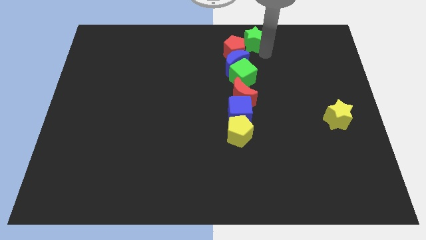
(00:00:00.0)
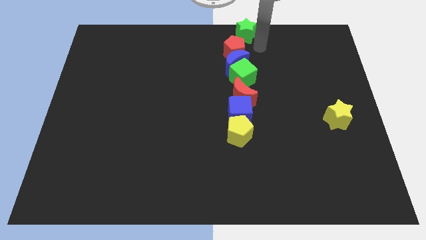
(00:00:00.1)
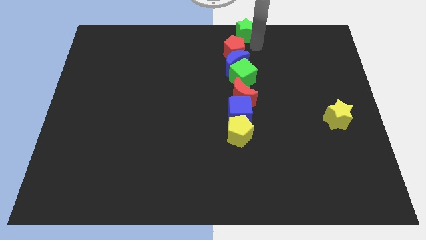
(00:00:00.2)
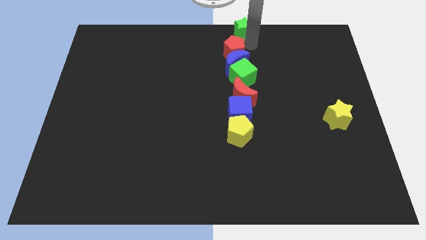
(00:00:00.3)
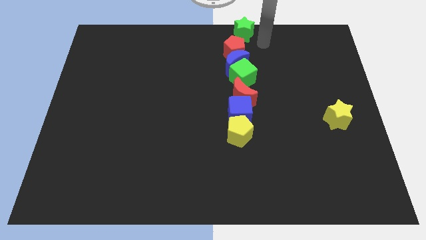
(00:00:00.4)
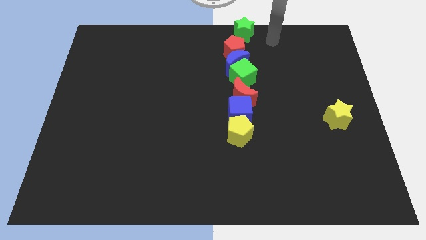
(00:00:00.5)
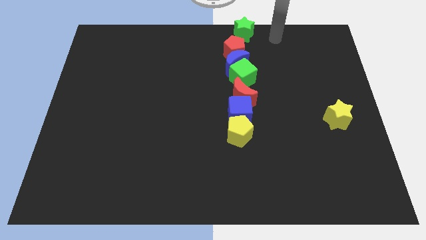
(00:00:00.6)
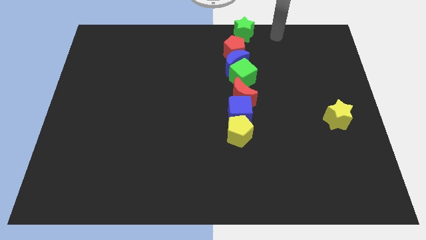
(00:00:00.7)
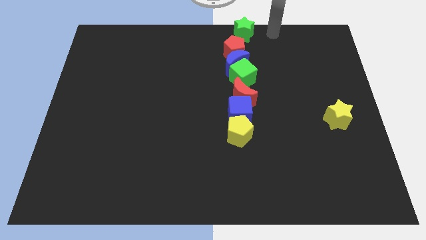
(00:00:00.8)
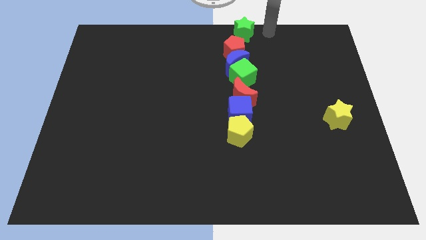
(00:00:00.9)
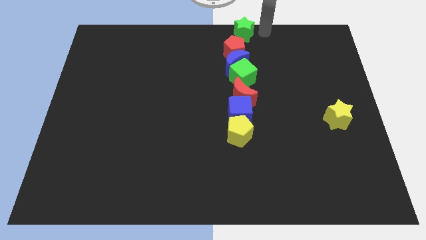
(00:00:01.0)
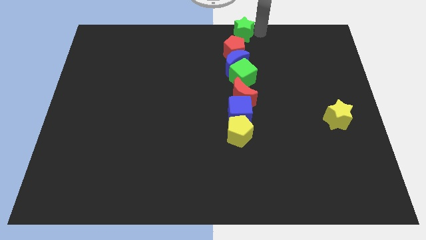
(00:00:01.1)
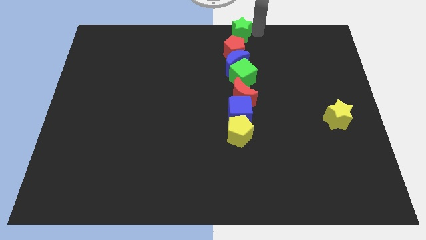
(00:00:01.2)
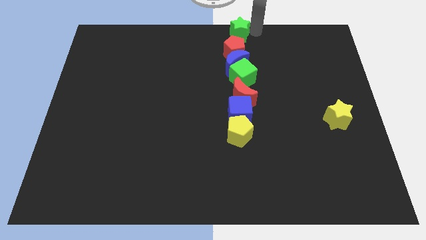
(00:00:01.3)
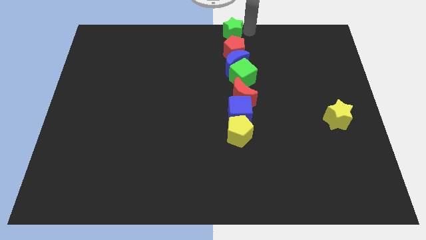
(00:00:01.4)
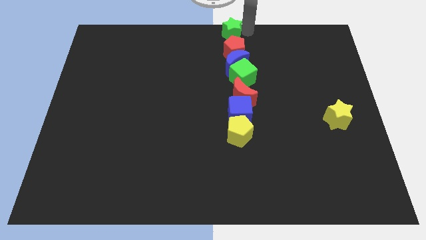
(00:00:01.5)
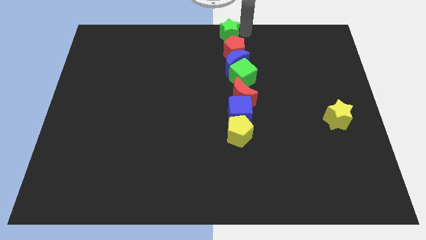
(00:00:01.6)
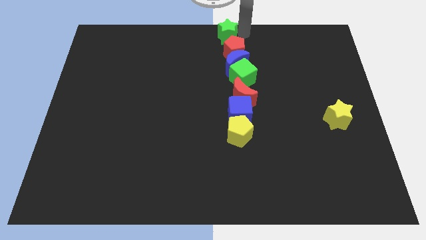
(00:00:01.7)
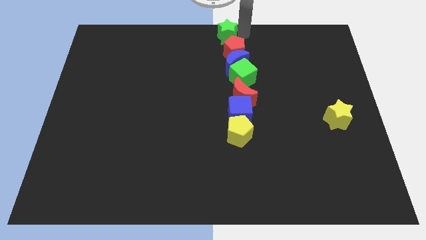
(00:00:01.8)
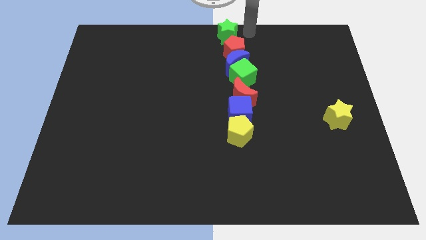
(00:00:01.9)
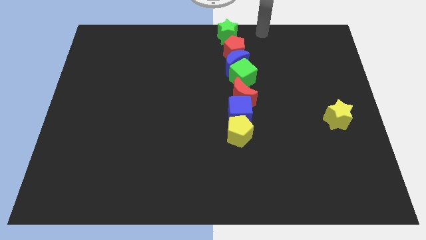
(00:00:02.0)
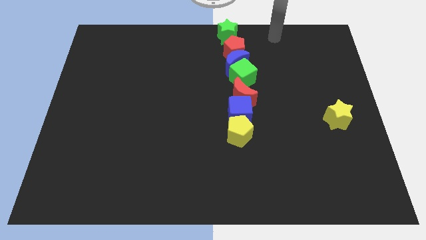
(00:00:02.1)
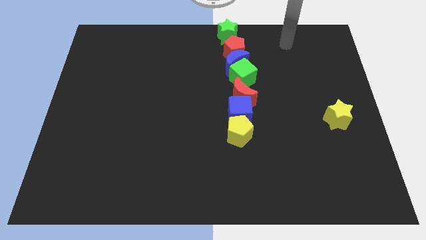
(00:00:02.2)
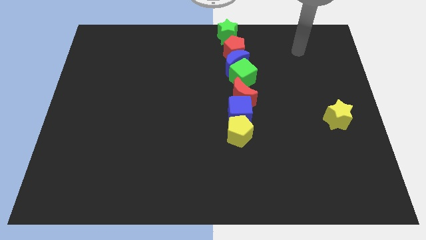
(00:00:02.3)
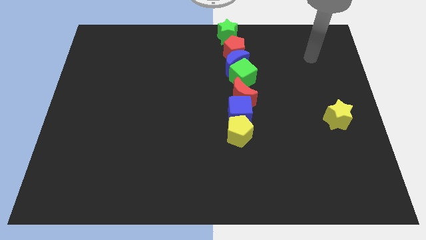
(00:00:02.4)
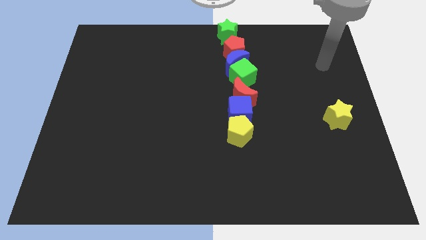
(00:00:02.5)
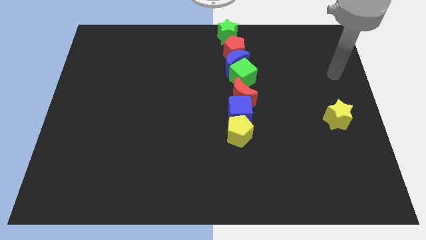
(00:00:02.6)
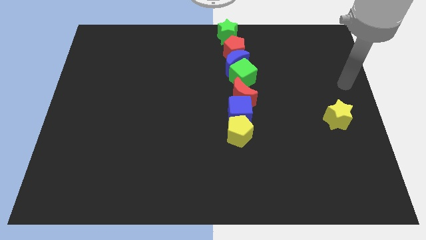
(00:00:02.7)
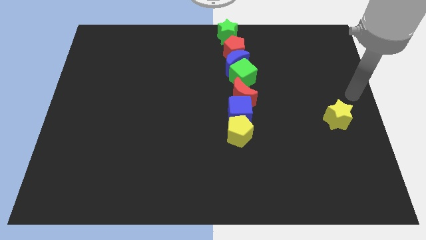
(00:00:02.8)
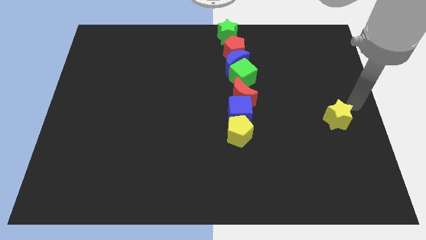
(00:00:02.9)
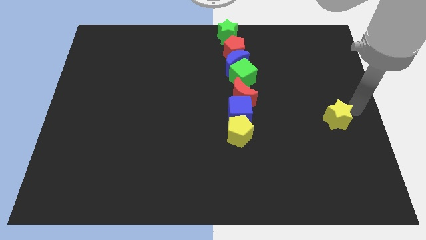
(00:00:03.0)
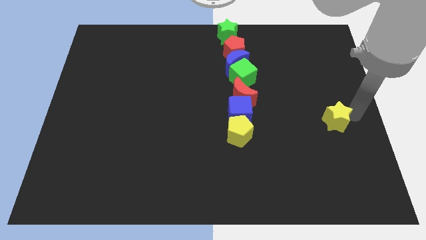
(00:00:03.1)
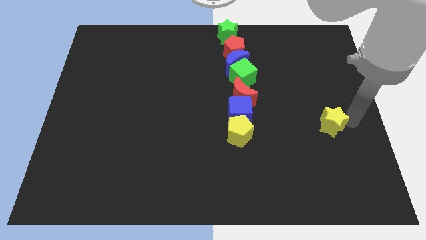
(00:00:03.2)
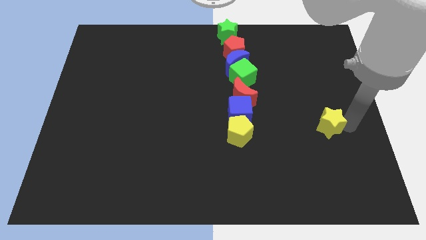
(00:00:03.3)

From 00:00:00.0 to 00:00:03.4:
move the yellow star to the left side

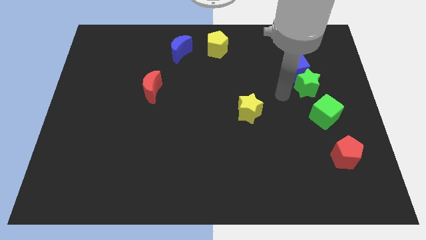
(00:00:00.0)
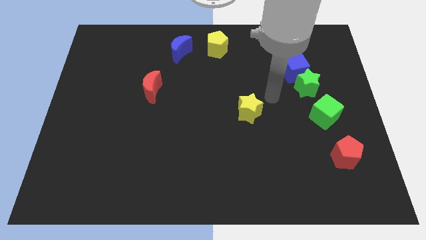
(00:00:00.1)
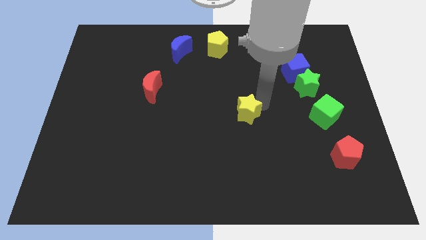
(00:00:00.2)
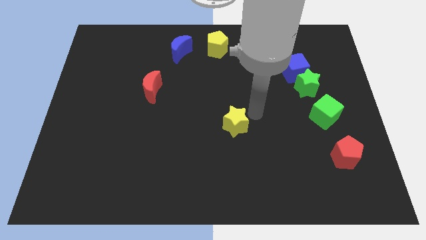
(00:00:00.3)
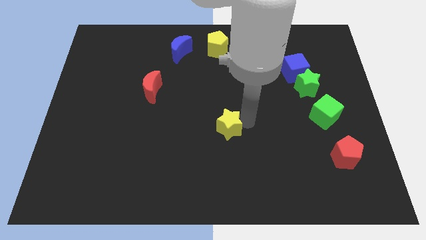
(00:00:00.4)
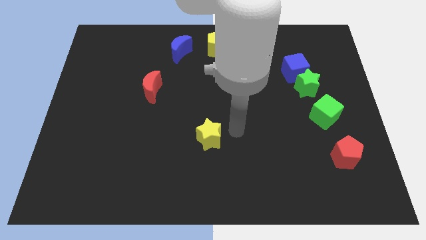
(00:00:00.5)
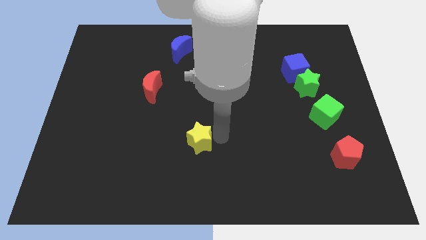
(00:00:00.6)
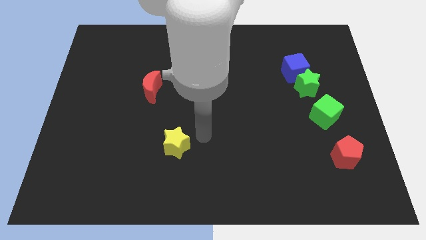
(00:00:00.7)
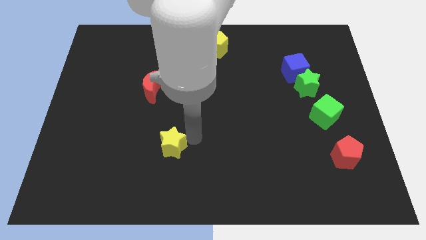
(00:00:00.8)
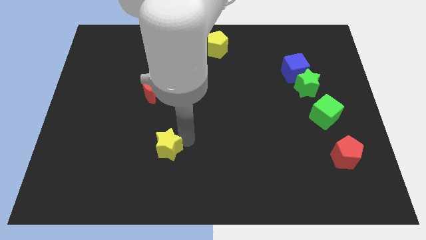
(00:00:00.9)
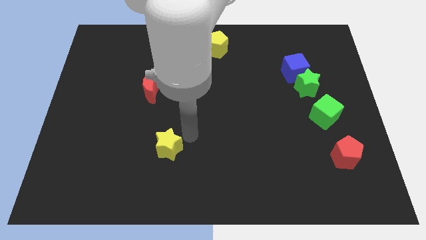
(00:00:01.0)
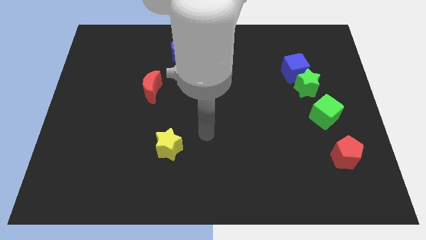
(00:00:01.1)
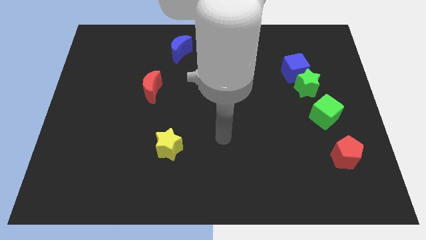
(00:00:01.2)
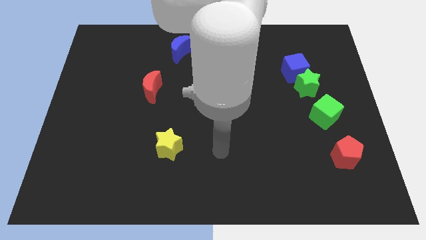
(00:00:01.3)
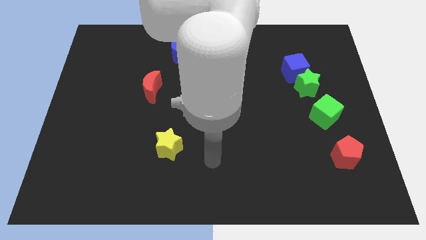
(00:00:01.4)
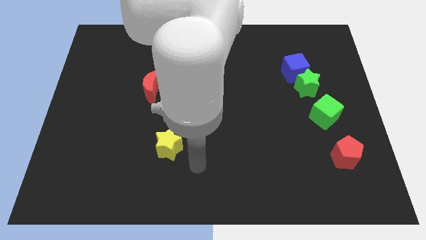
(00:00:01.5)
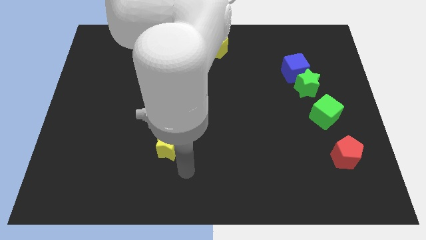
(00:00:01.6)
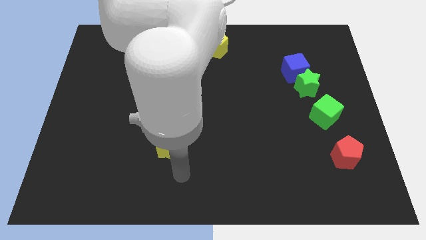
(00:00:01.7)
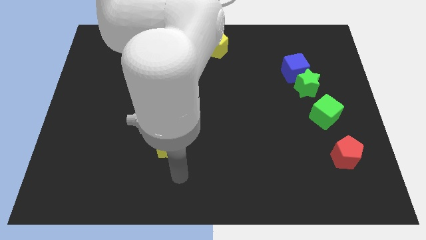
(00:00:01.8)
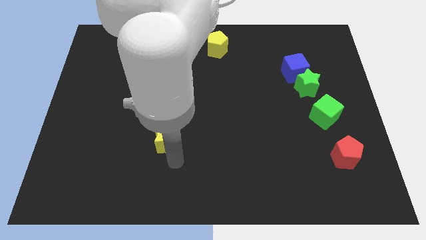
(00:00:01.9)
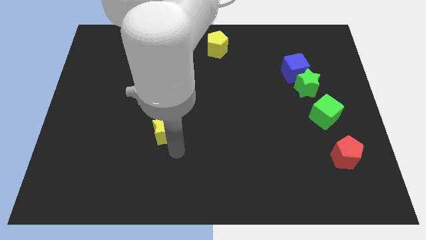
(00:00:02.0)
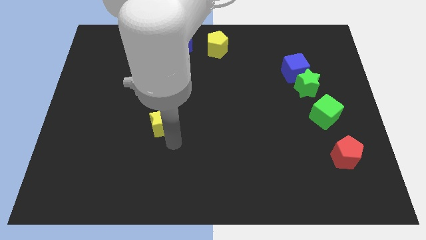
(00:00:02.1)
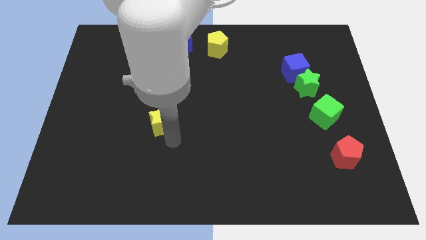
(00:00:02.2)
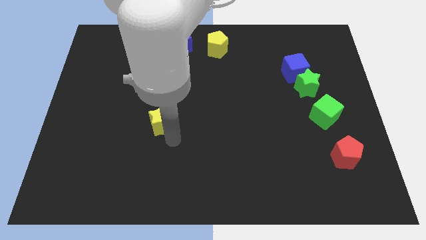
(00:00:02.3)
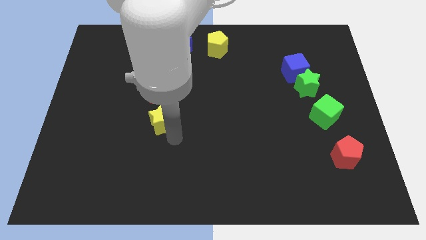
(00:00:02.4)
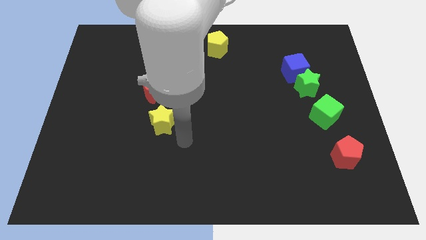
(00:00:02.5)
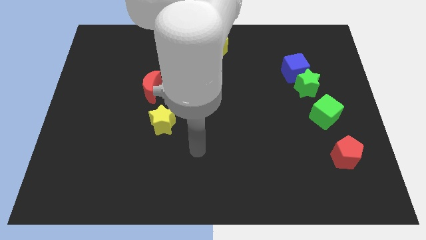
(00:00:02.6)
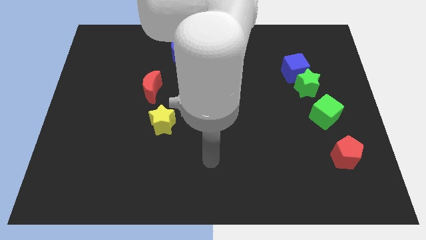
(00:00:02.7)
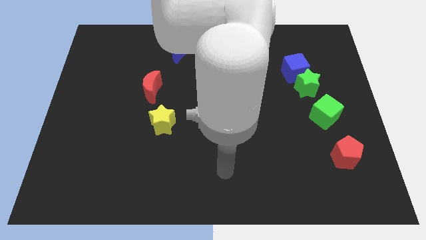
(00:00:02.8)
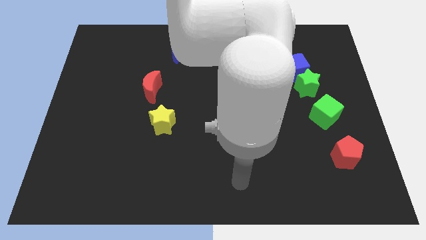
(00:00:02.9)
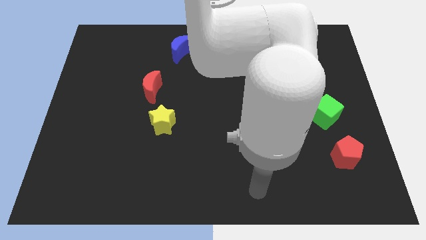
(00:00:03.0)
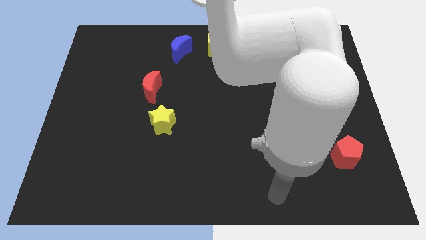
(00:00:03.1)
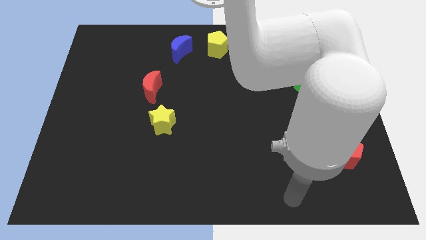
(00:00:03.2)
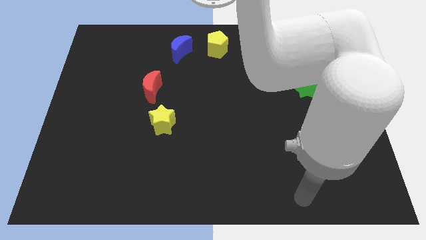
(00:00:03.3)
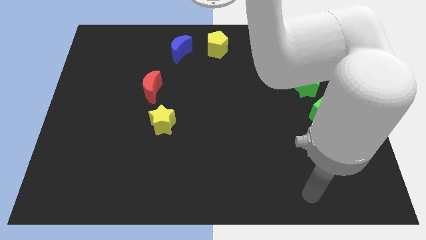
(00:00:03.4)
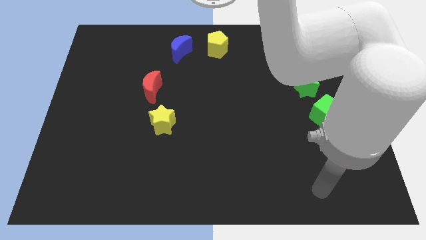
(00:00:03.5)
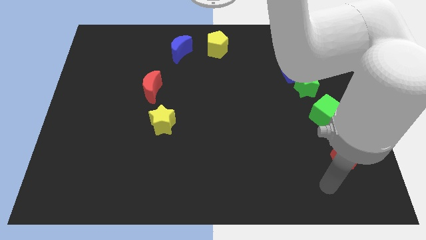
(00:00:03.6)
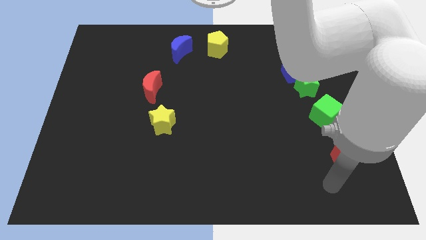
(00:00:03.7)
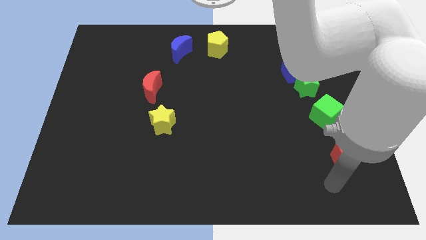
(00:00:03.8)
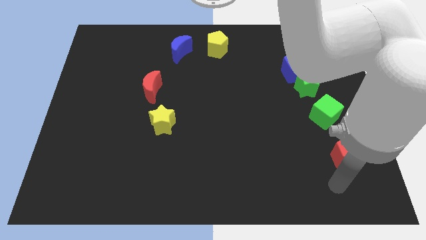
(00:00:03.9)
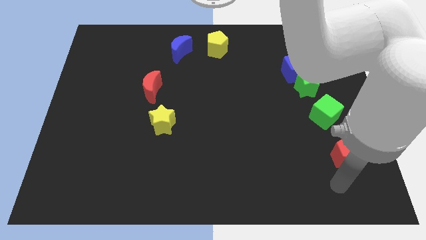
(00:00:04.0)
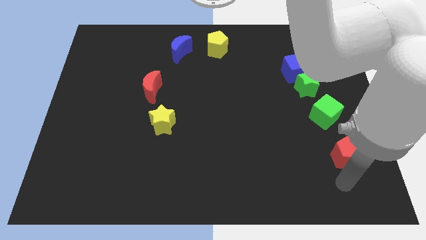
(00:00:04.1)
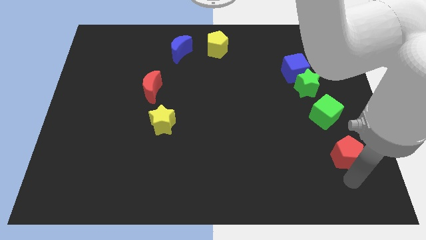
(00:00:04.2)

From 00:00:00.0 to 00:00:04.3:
push the yellow star below the red crescent

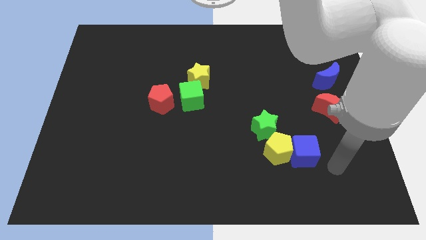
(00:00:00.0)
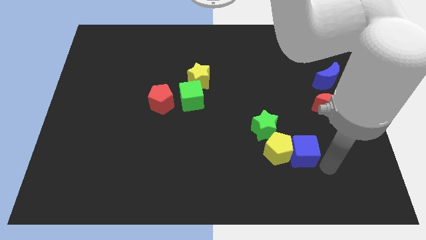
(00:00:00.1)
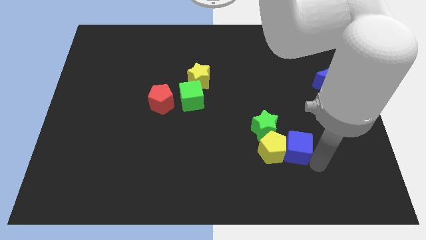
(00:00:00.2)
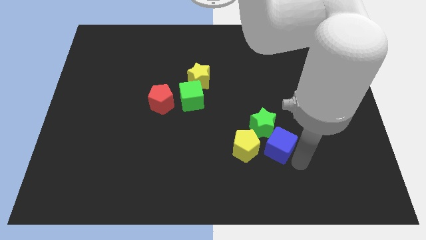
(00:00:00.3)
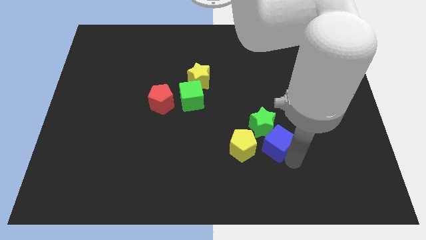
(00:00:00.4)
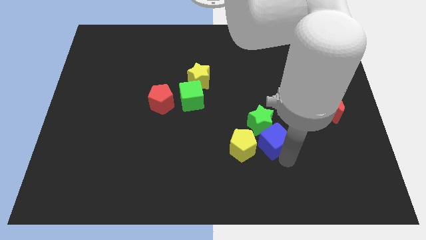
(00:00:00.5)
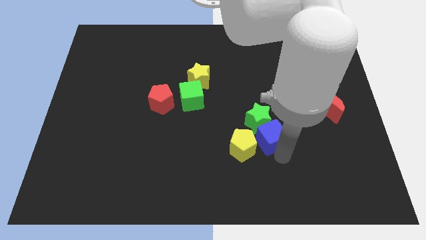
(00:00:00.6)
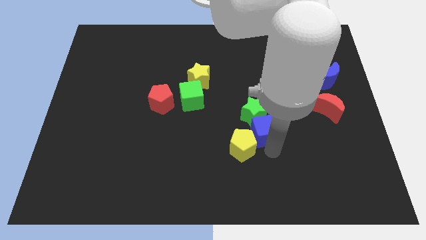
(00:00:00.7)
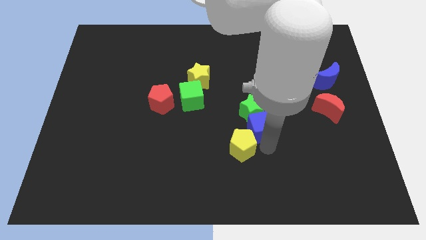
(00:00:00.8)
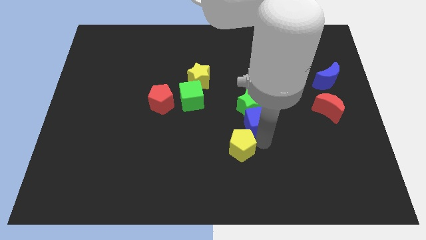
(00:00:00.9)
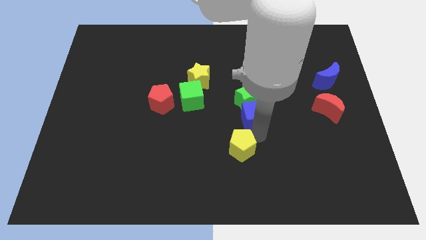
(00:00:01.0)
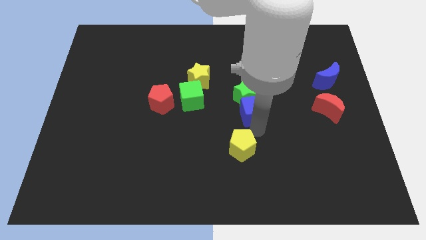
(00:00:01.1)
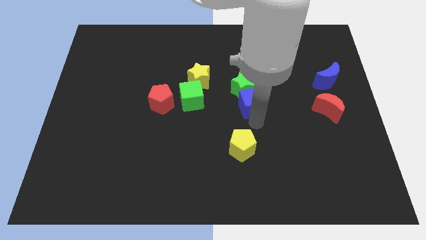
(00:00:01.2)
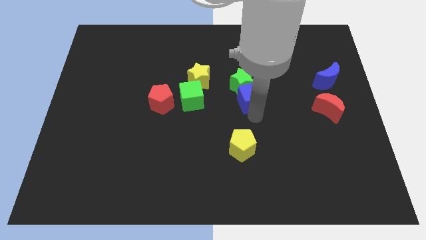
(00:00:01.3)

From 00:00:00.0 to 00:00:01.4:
push the blue cube into green star
